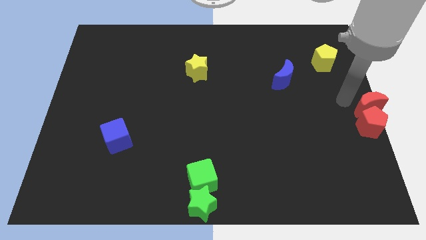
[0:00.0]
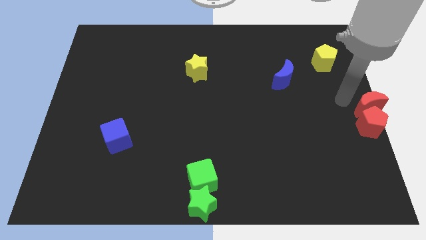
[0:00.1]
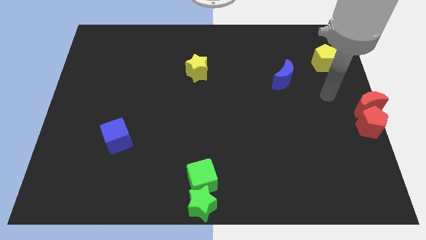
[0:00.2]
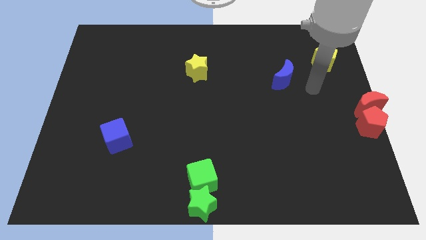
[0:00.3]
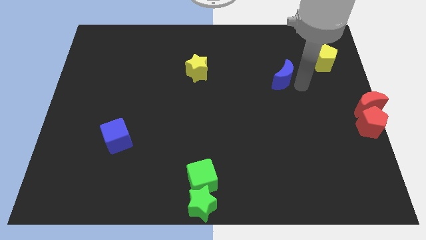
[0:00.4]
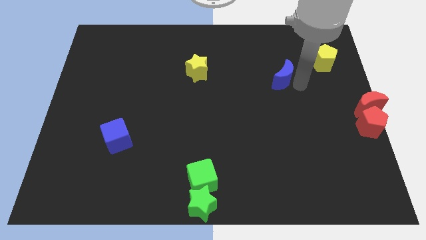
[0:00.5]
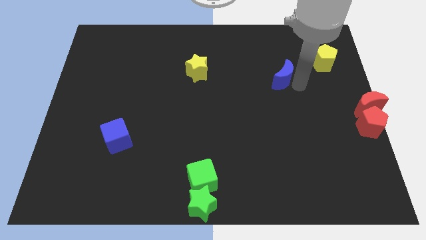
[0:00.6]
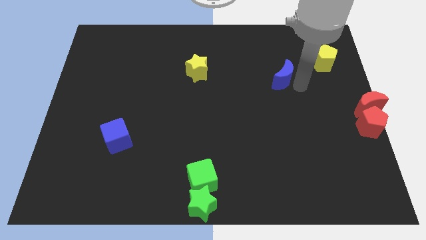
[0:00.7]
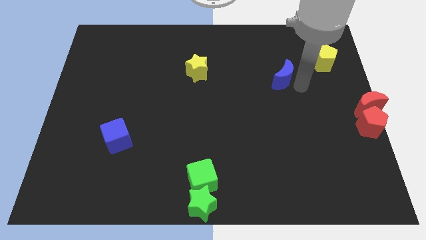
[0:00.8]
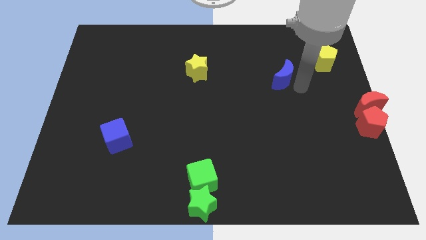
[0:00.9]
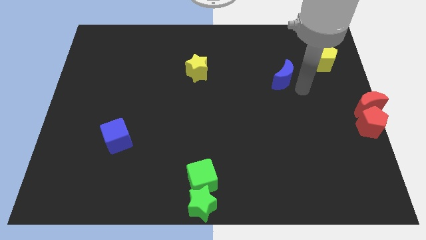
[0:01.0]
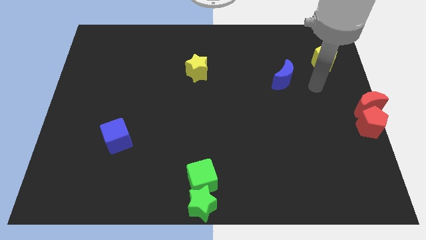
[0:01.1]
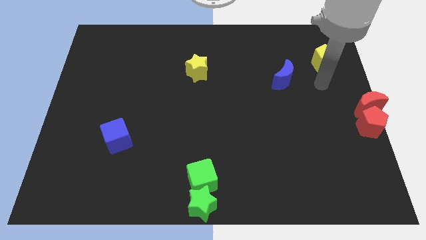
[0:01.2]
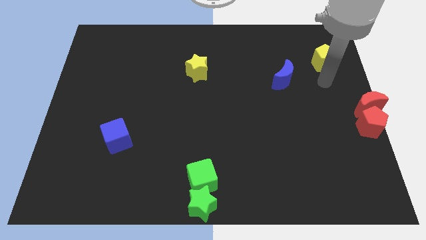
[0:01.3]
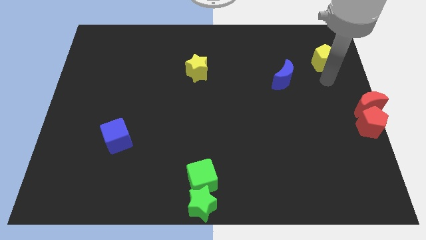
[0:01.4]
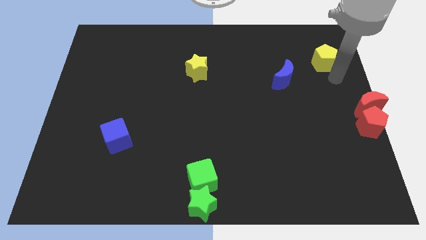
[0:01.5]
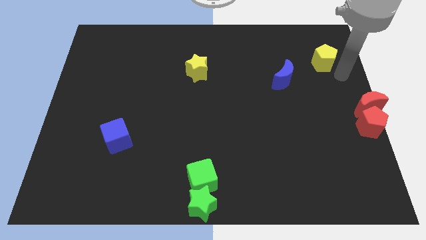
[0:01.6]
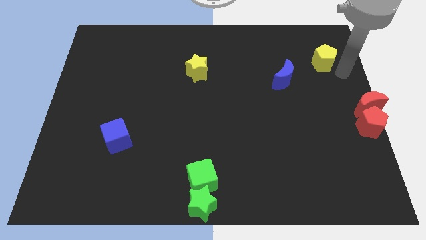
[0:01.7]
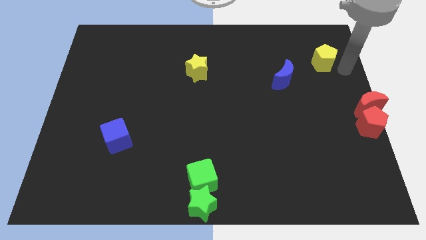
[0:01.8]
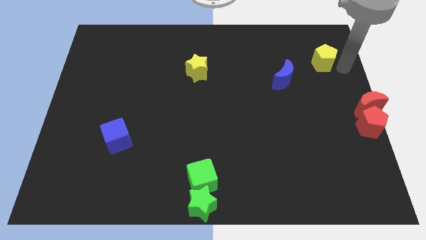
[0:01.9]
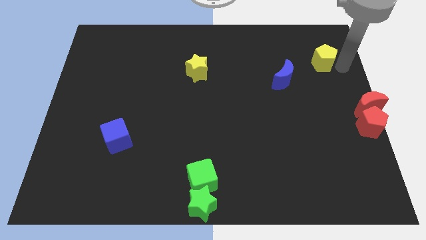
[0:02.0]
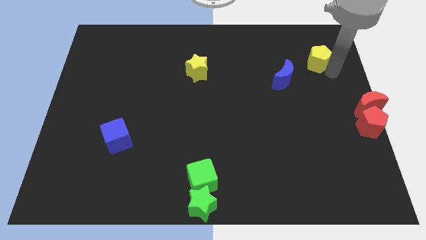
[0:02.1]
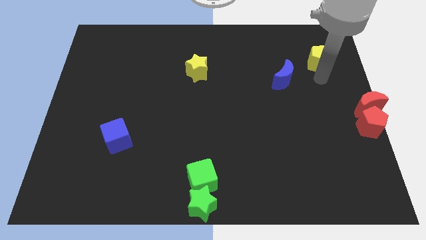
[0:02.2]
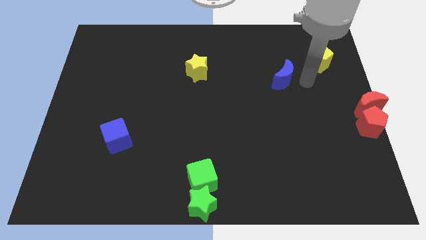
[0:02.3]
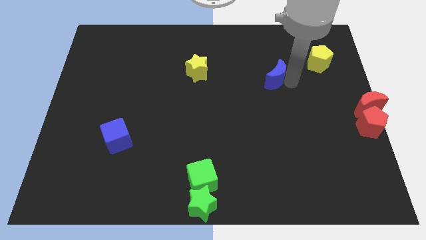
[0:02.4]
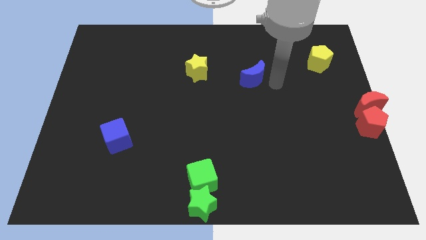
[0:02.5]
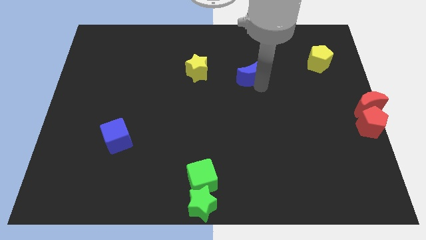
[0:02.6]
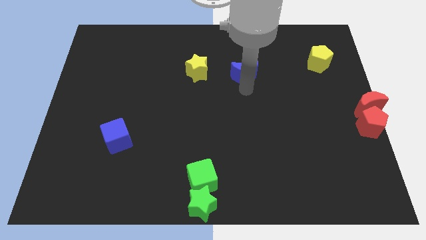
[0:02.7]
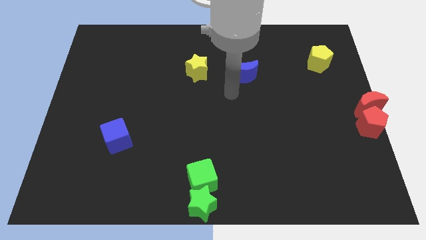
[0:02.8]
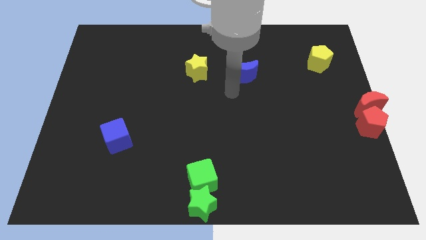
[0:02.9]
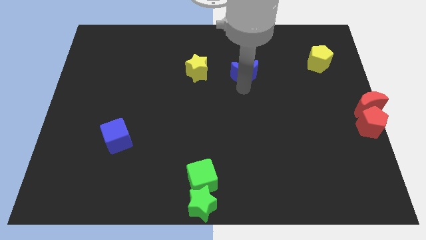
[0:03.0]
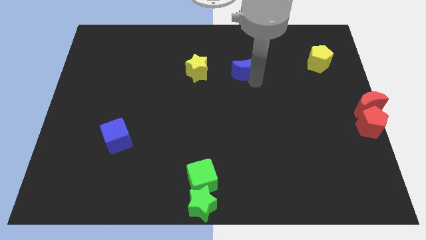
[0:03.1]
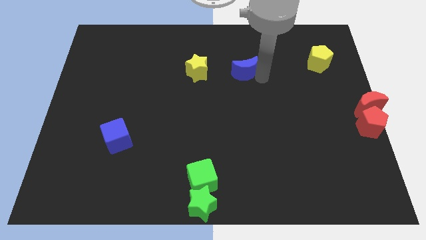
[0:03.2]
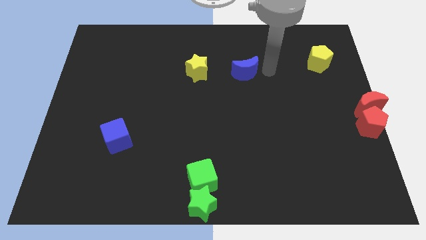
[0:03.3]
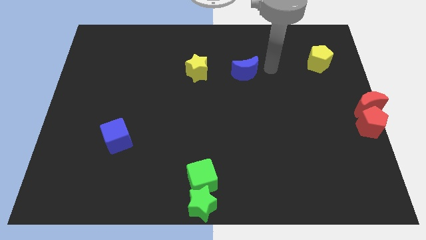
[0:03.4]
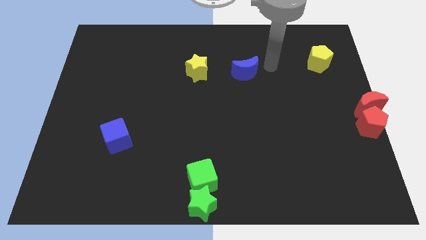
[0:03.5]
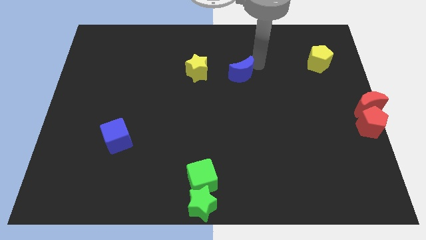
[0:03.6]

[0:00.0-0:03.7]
place the blue moon in between the yellow blocks

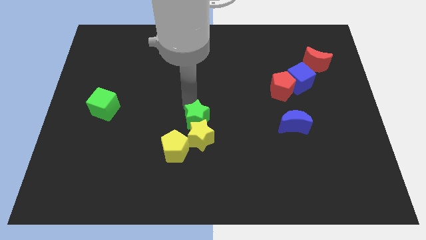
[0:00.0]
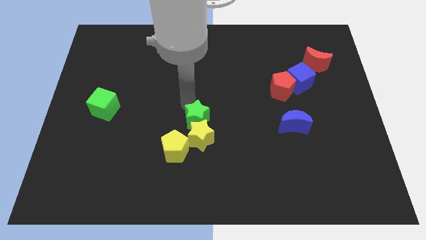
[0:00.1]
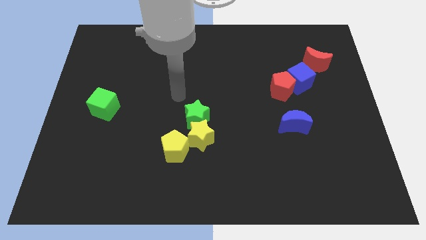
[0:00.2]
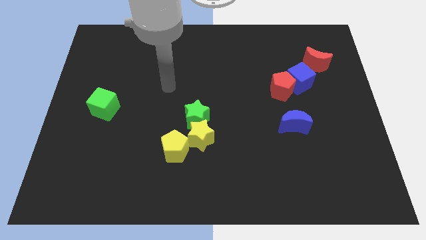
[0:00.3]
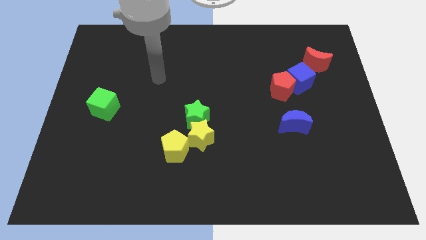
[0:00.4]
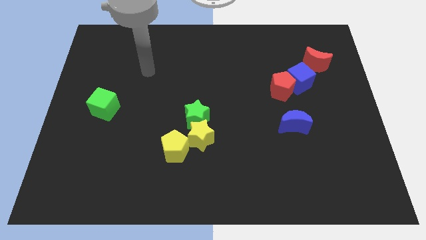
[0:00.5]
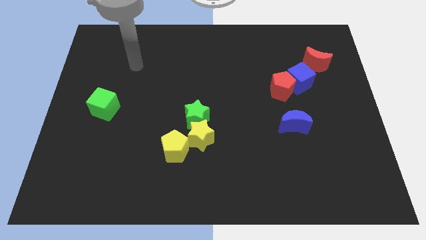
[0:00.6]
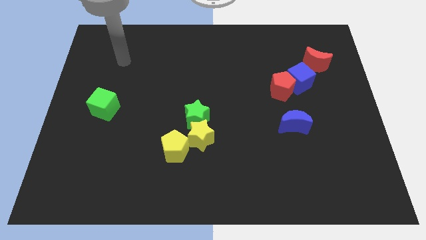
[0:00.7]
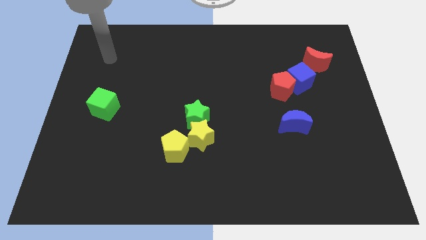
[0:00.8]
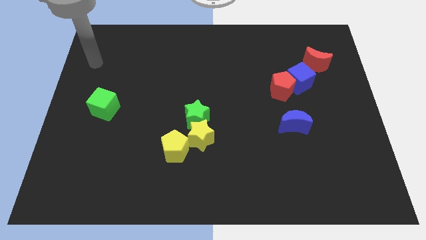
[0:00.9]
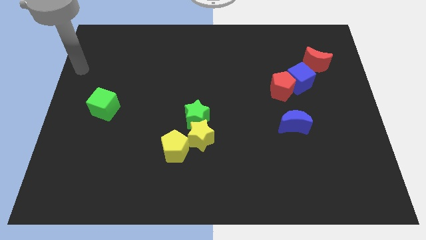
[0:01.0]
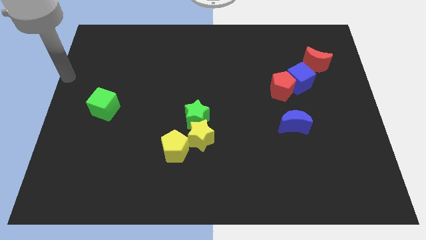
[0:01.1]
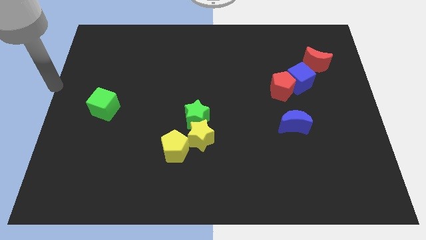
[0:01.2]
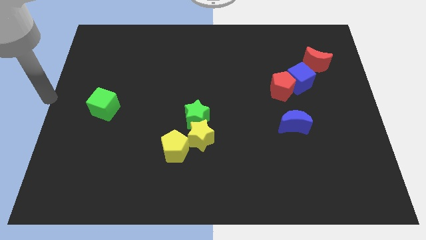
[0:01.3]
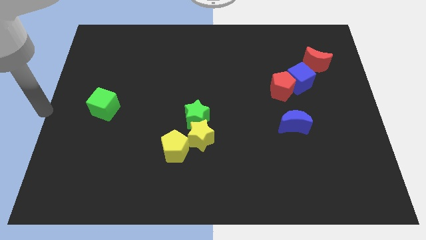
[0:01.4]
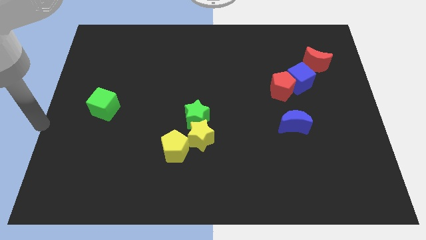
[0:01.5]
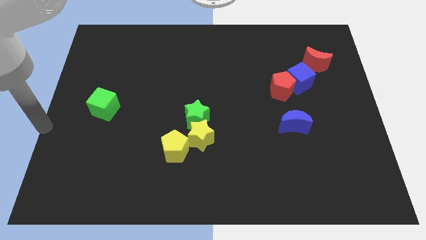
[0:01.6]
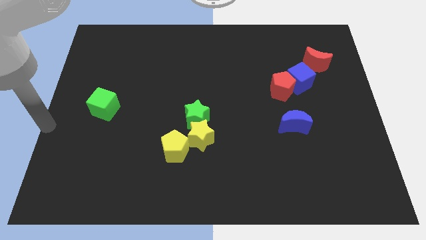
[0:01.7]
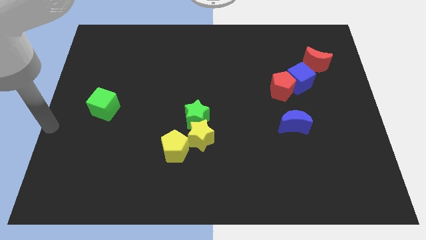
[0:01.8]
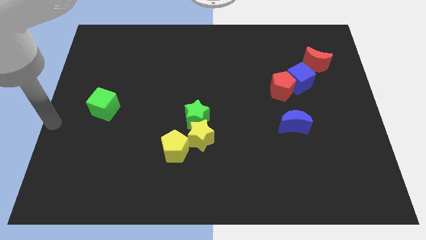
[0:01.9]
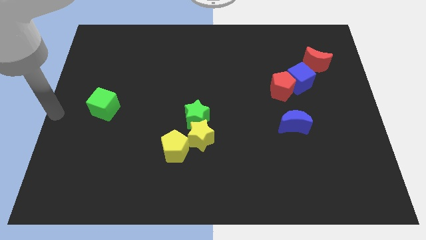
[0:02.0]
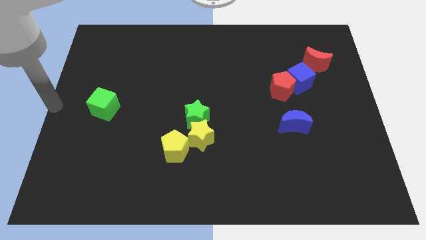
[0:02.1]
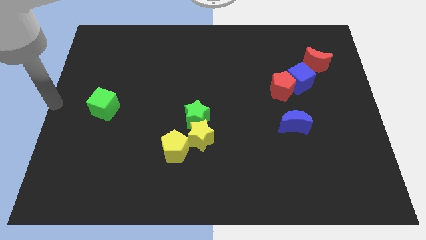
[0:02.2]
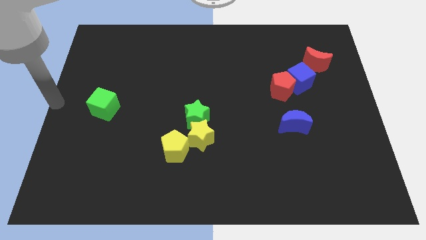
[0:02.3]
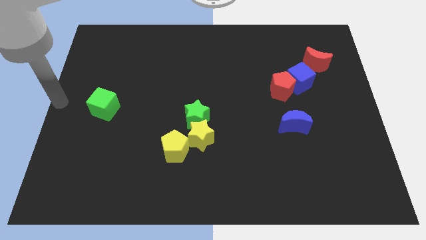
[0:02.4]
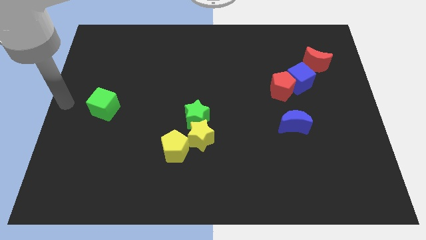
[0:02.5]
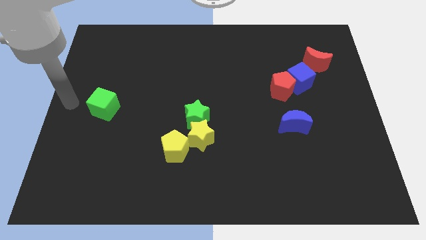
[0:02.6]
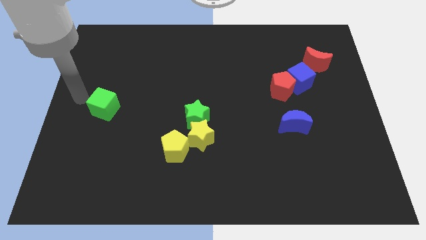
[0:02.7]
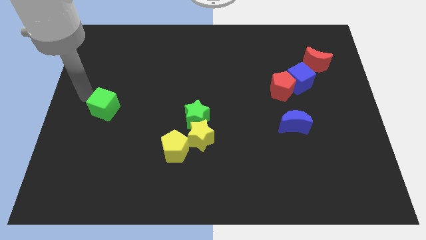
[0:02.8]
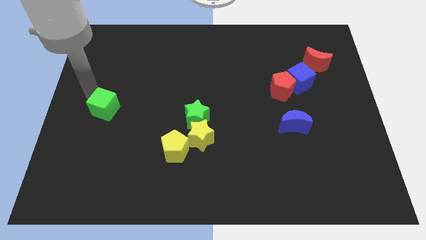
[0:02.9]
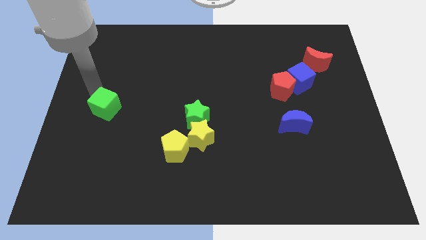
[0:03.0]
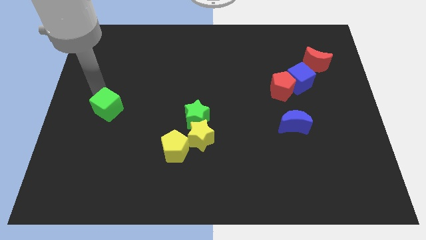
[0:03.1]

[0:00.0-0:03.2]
touch the green cube

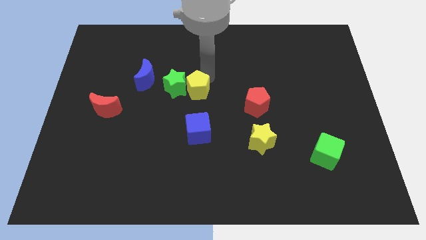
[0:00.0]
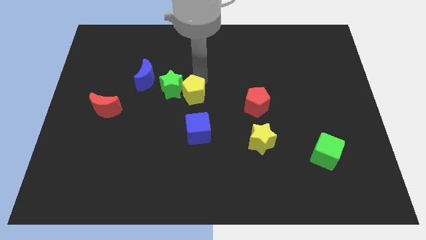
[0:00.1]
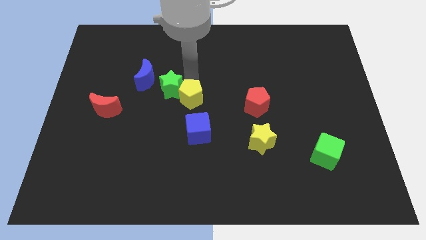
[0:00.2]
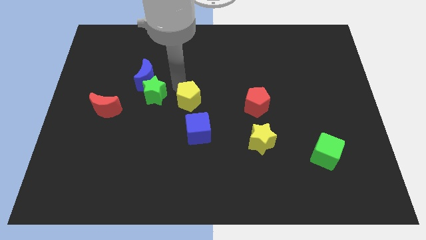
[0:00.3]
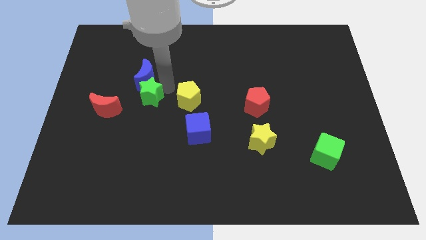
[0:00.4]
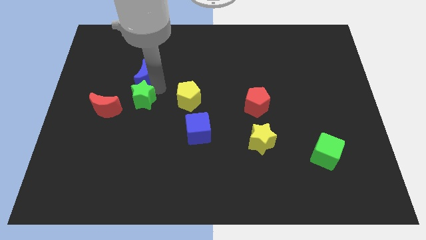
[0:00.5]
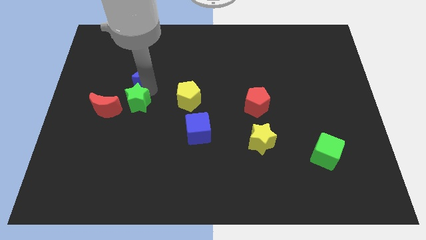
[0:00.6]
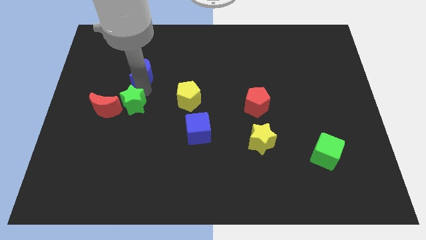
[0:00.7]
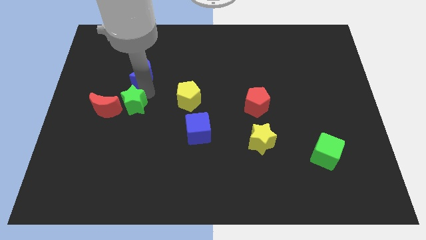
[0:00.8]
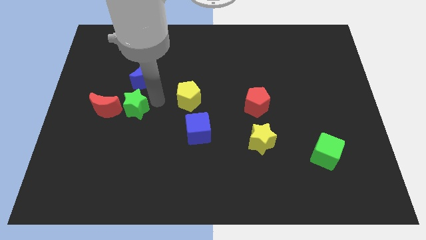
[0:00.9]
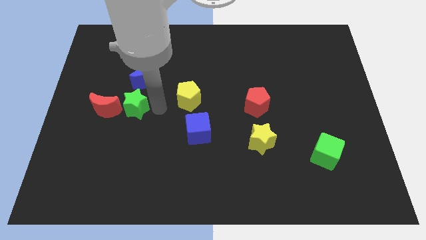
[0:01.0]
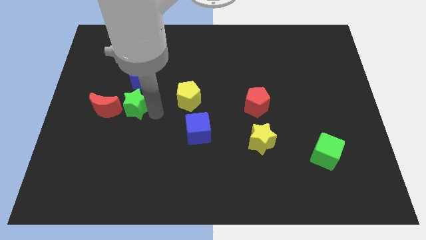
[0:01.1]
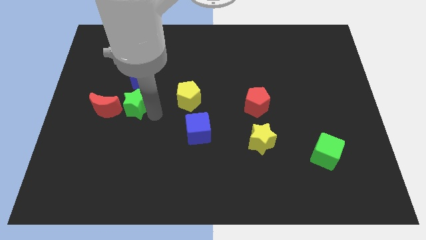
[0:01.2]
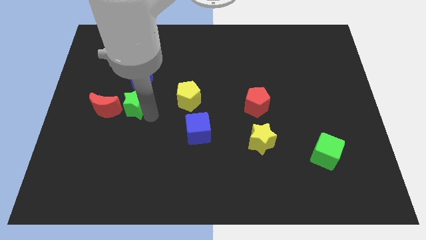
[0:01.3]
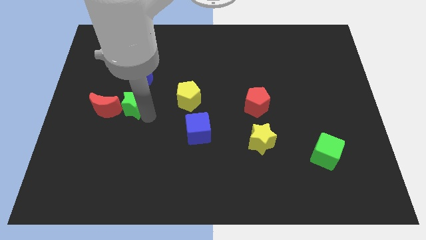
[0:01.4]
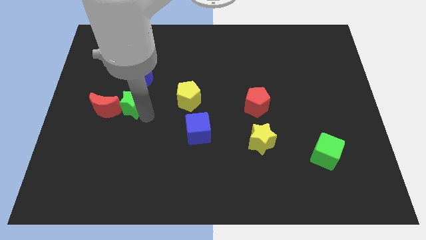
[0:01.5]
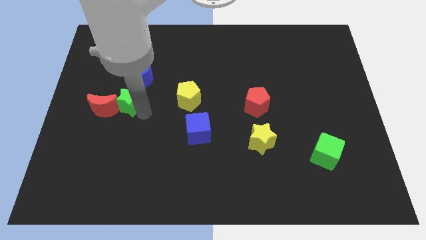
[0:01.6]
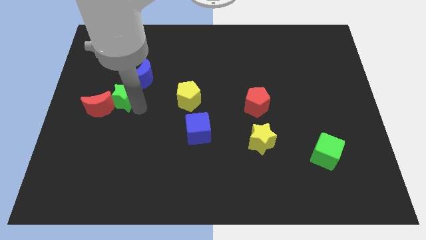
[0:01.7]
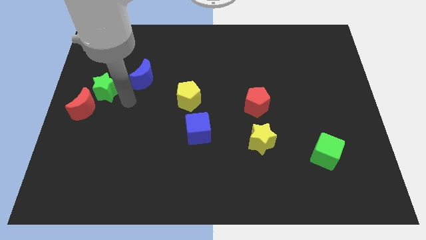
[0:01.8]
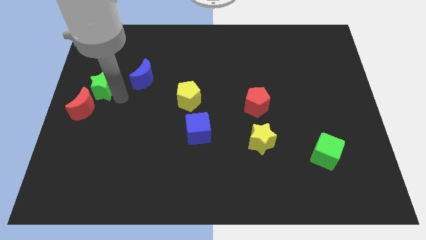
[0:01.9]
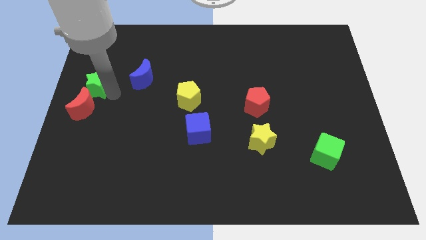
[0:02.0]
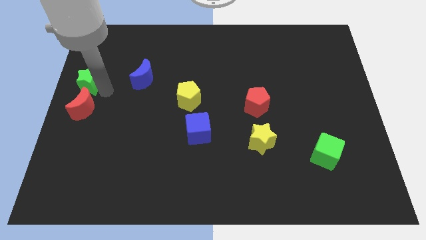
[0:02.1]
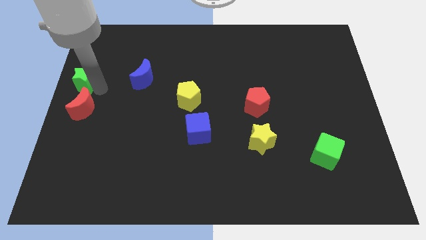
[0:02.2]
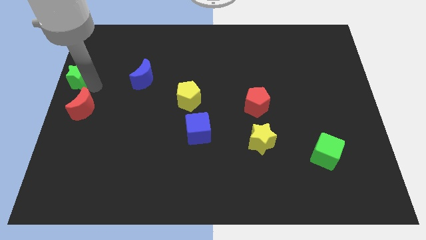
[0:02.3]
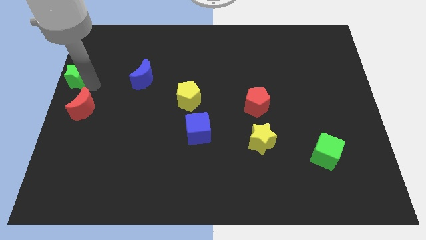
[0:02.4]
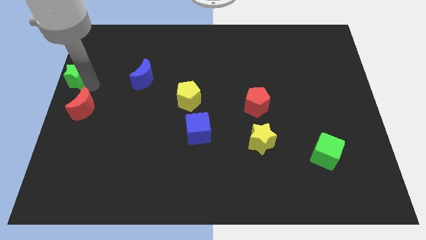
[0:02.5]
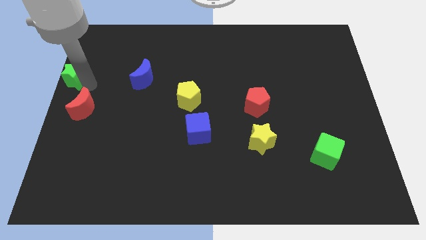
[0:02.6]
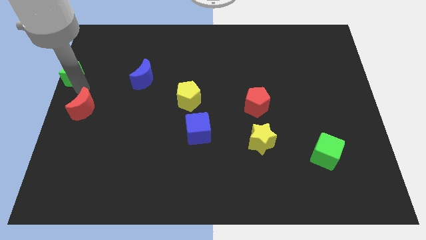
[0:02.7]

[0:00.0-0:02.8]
move green star to the left of the board
